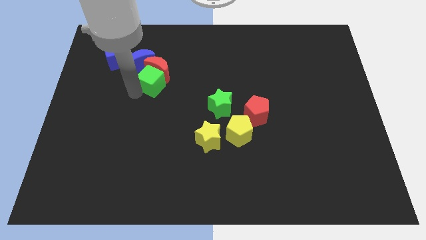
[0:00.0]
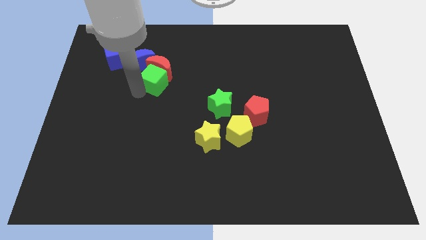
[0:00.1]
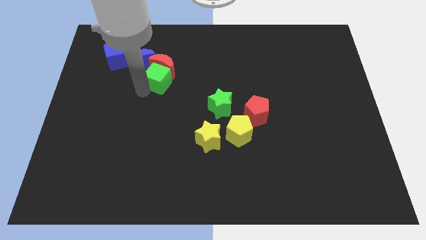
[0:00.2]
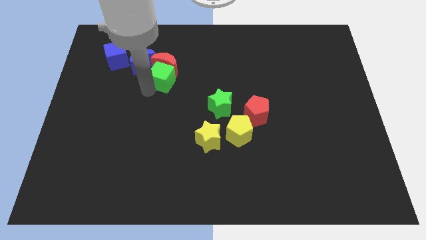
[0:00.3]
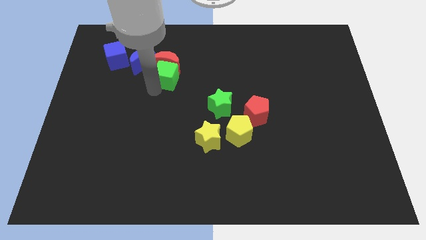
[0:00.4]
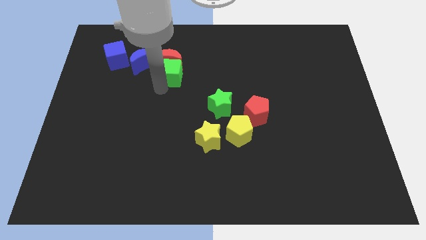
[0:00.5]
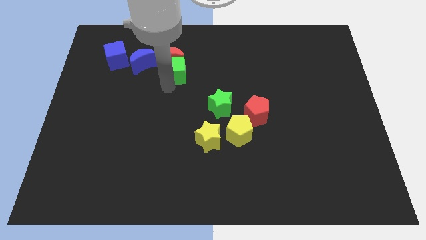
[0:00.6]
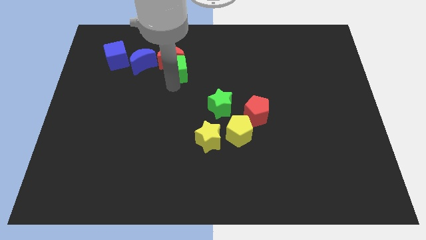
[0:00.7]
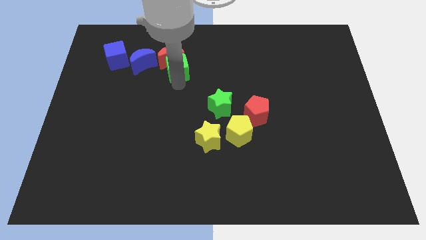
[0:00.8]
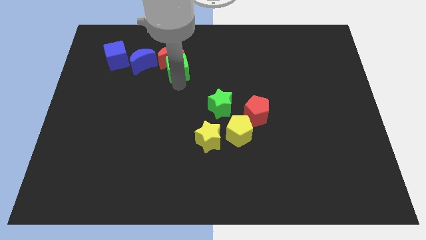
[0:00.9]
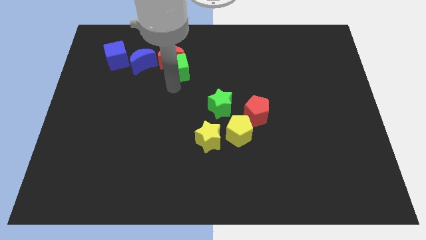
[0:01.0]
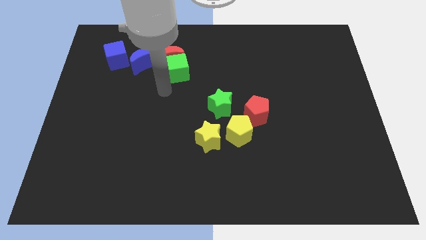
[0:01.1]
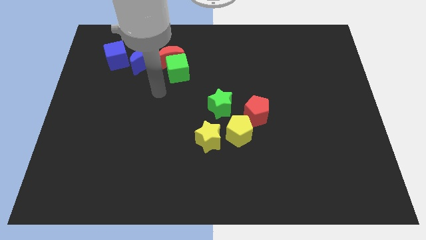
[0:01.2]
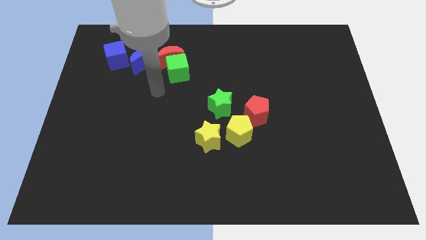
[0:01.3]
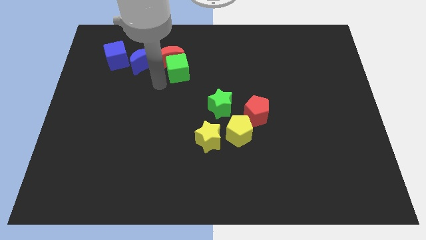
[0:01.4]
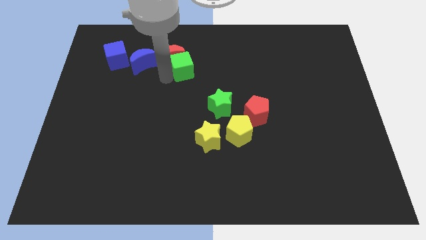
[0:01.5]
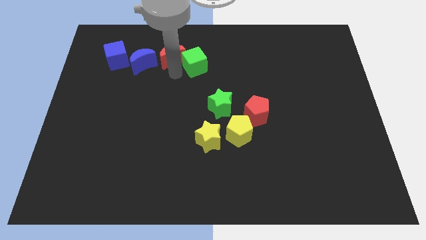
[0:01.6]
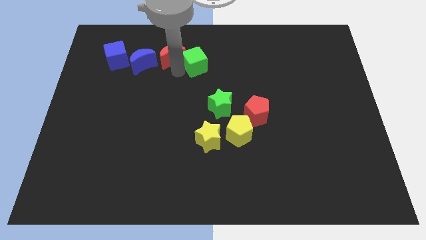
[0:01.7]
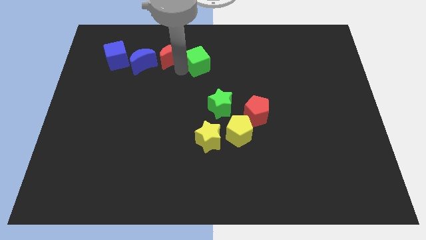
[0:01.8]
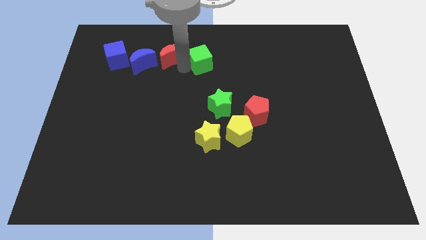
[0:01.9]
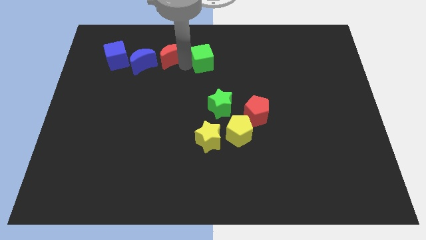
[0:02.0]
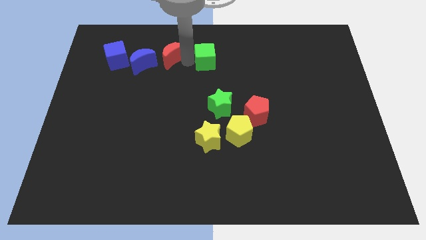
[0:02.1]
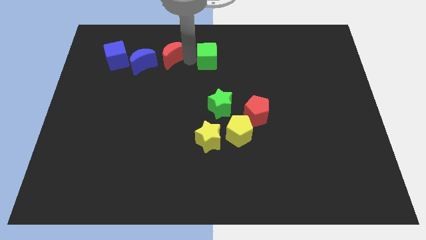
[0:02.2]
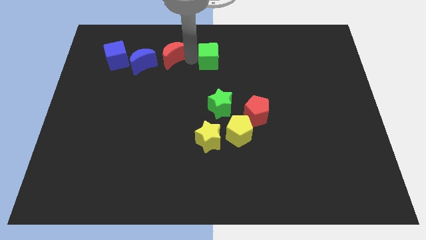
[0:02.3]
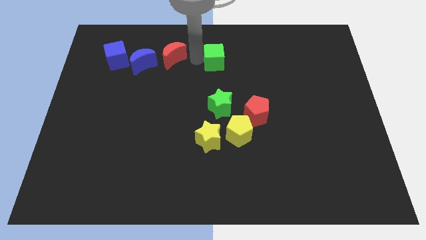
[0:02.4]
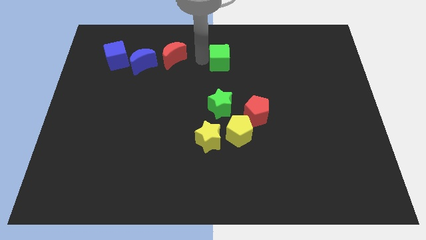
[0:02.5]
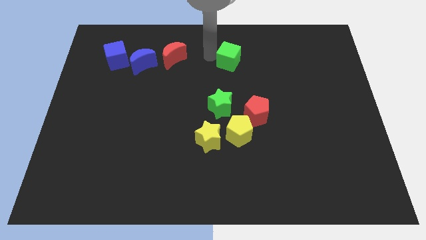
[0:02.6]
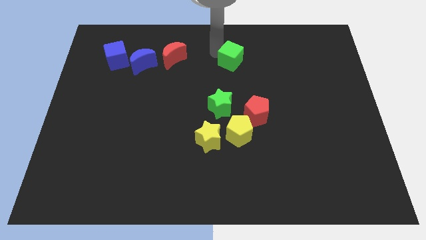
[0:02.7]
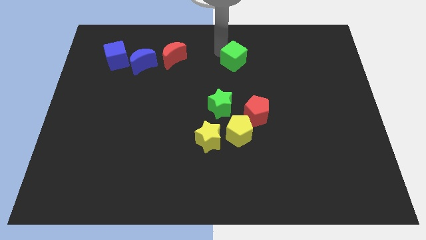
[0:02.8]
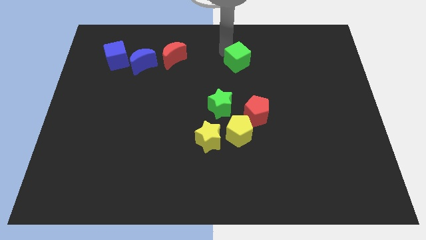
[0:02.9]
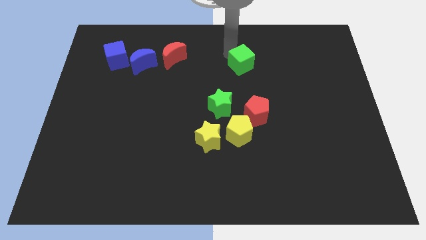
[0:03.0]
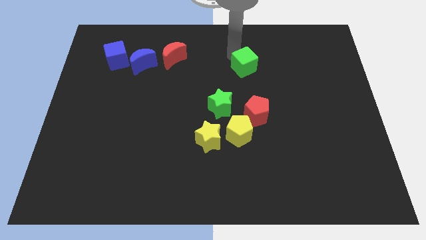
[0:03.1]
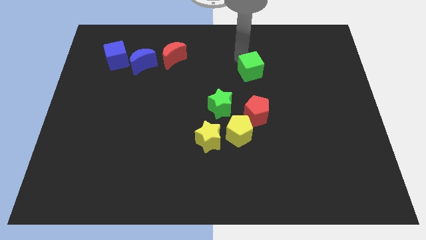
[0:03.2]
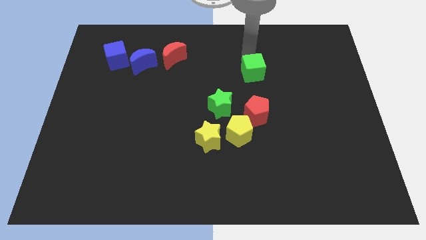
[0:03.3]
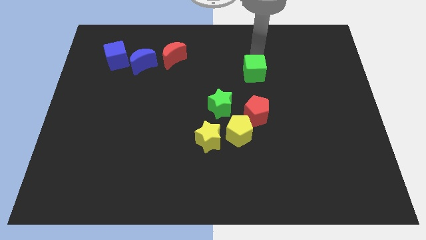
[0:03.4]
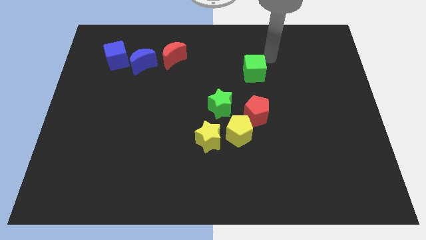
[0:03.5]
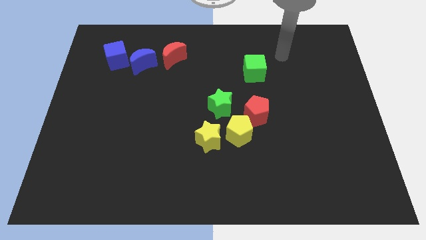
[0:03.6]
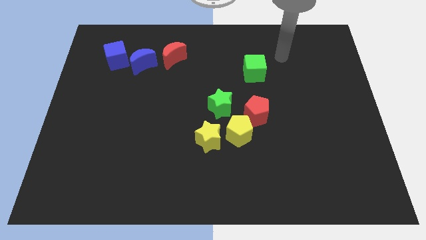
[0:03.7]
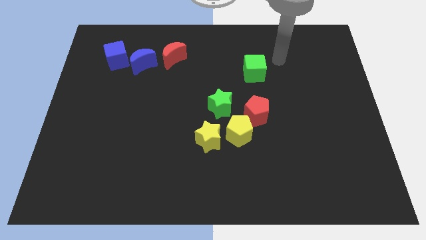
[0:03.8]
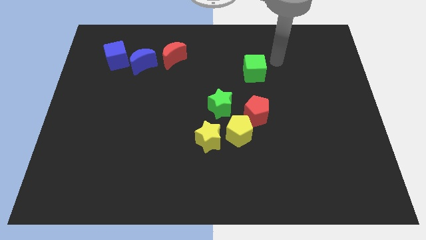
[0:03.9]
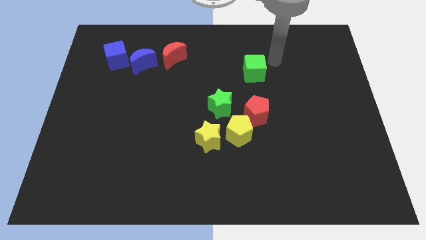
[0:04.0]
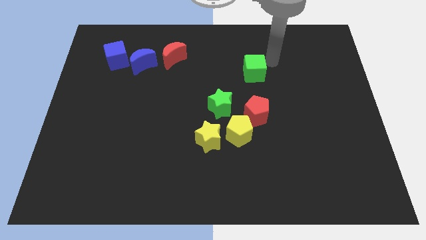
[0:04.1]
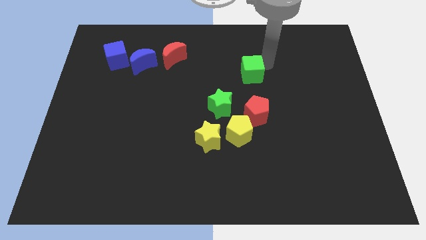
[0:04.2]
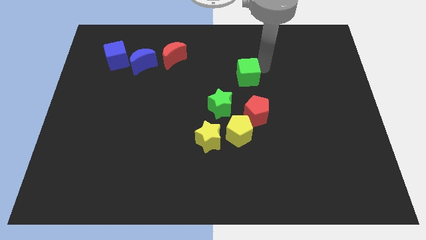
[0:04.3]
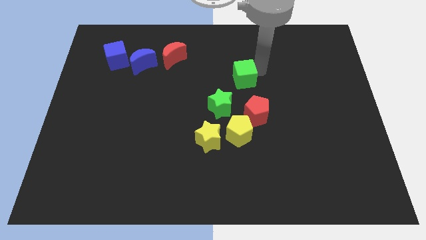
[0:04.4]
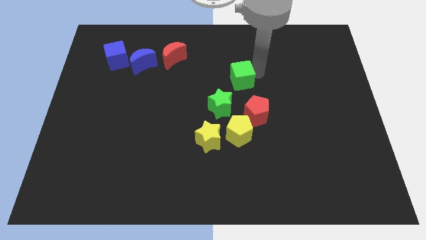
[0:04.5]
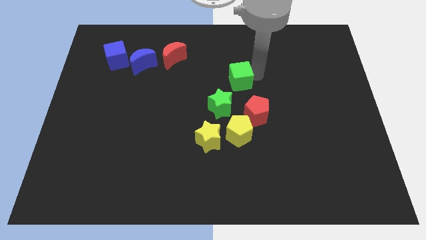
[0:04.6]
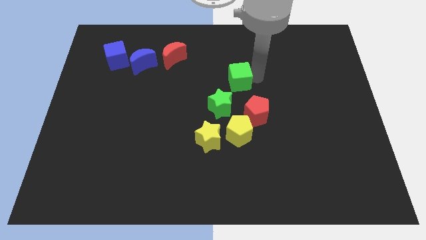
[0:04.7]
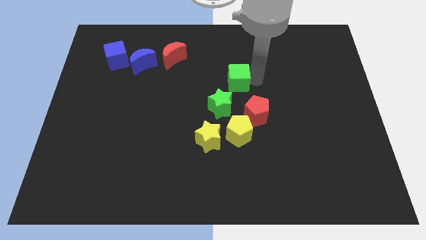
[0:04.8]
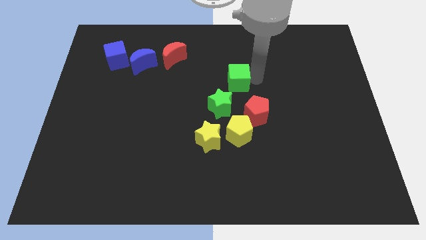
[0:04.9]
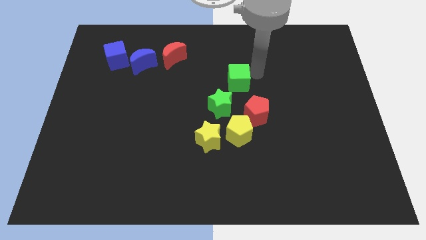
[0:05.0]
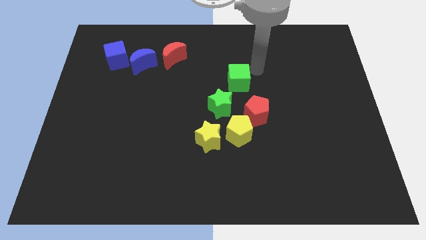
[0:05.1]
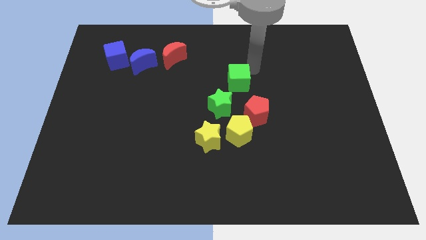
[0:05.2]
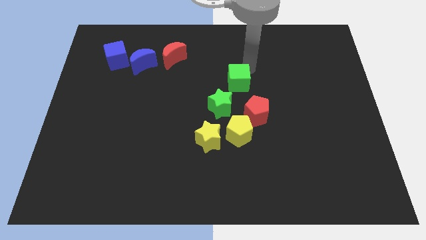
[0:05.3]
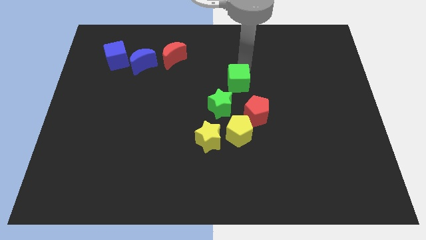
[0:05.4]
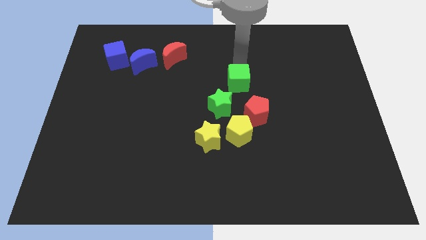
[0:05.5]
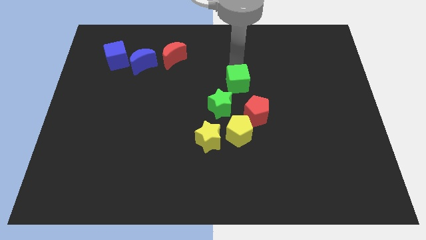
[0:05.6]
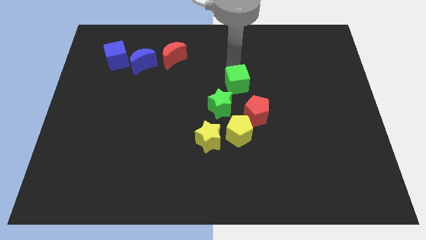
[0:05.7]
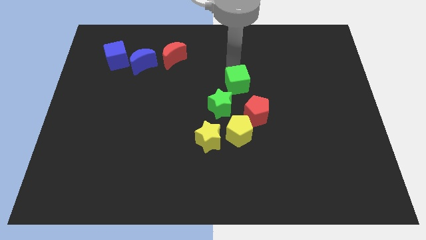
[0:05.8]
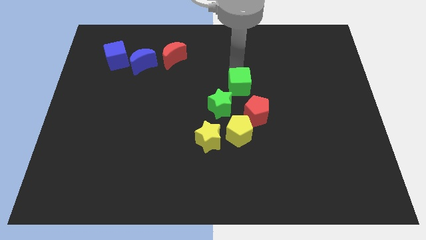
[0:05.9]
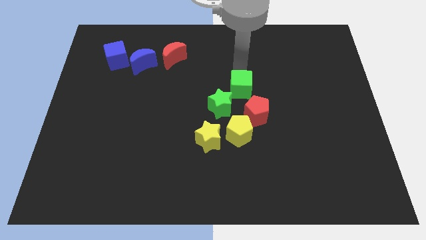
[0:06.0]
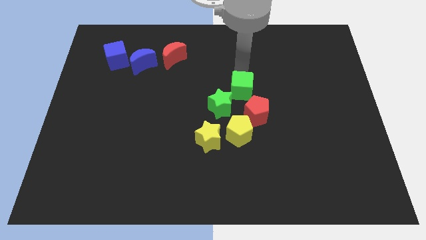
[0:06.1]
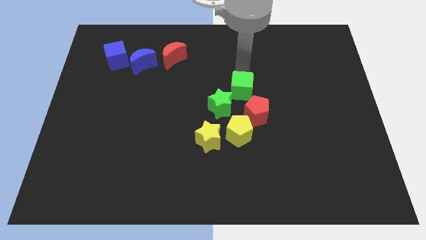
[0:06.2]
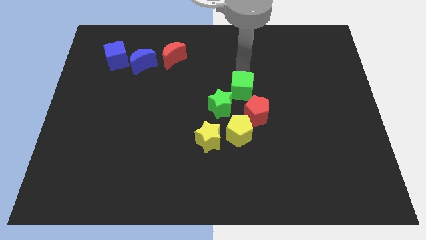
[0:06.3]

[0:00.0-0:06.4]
place the green cube diagonally to the red pentagon

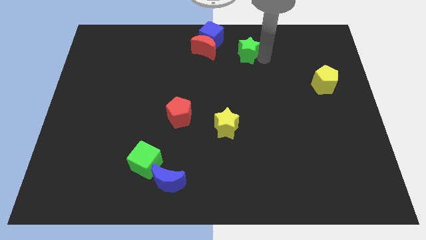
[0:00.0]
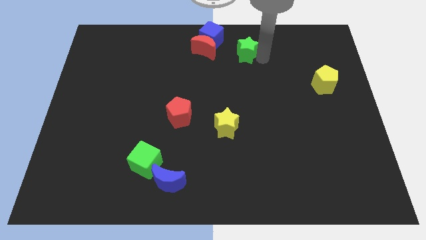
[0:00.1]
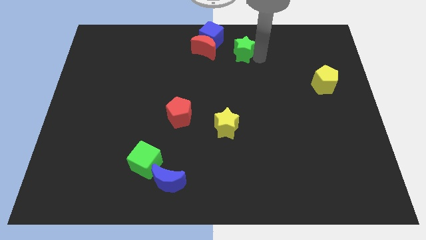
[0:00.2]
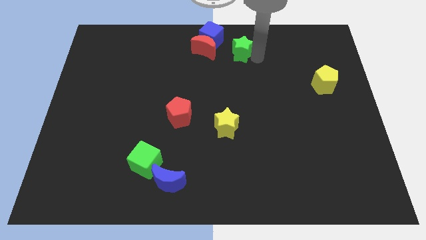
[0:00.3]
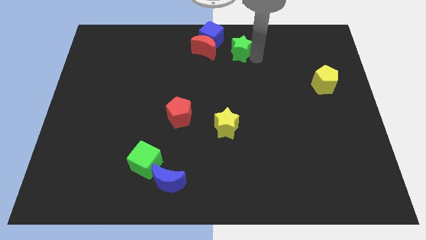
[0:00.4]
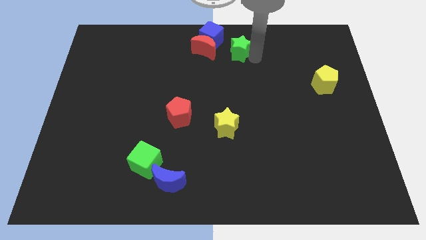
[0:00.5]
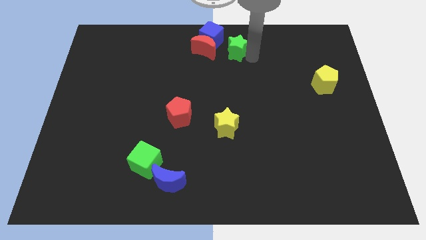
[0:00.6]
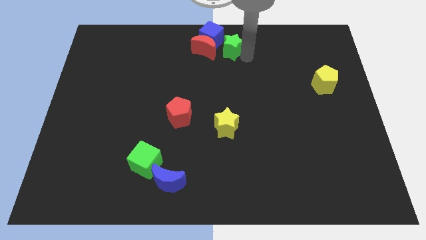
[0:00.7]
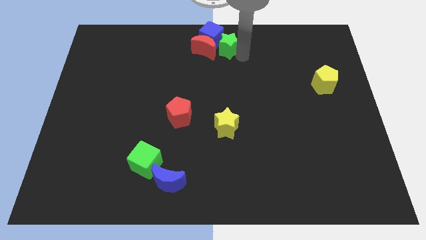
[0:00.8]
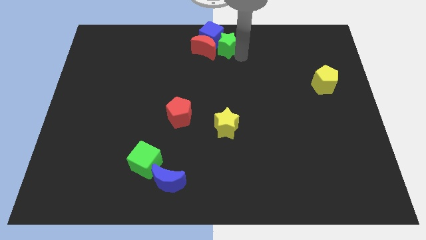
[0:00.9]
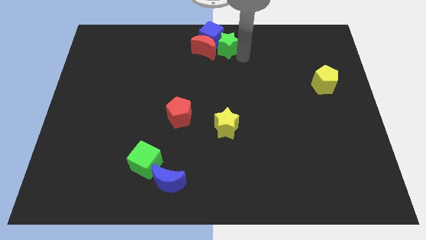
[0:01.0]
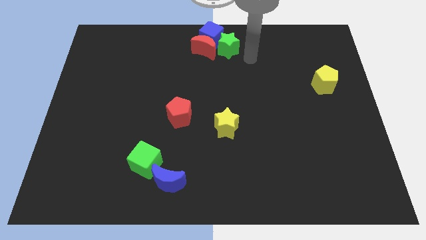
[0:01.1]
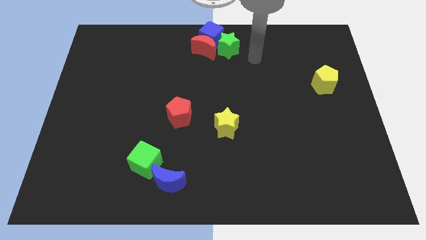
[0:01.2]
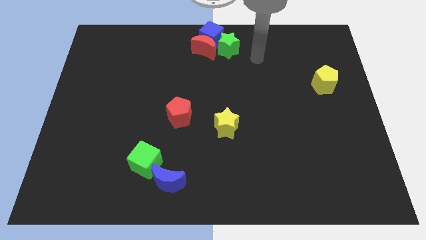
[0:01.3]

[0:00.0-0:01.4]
push the green star close to the blue cube

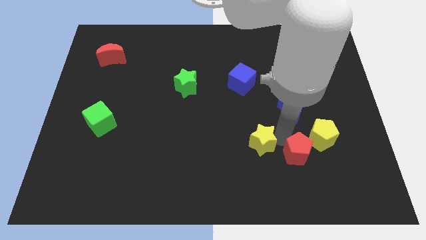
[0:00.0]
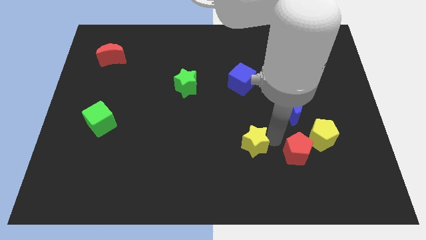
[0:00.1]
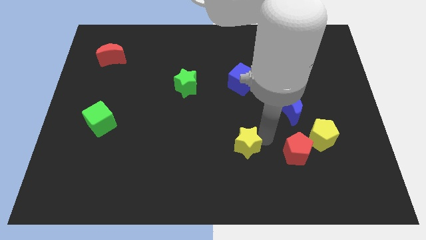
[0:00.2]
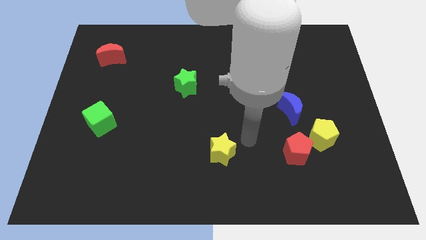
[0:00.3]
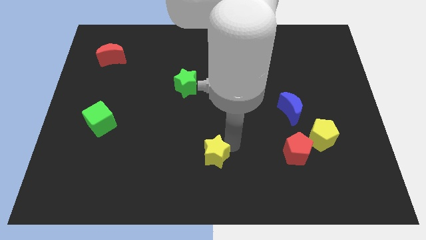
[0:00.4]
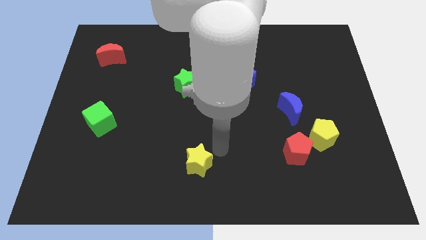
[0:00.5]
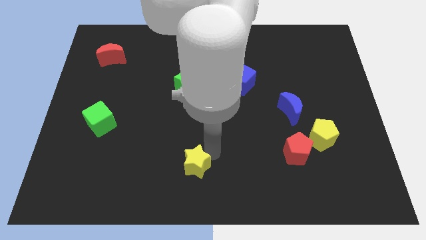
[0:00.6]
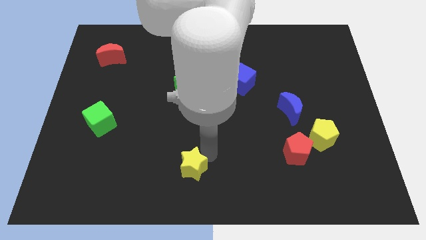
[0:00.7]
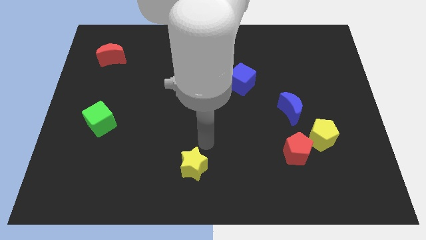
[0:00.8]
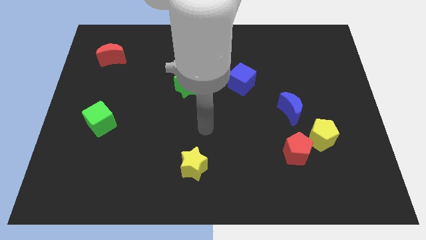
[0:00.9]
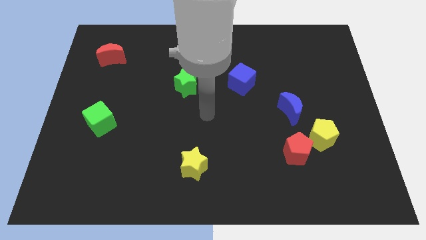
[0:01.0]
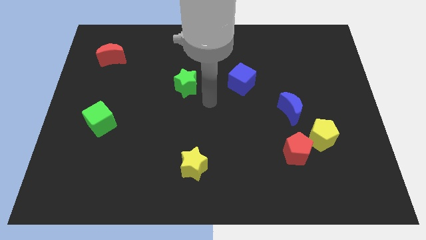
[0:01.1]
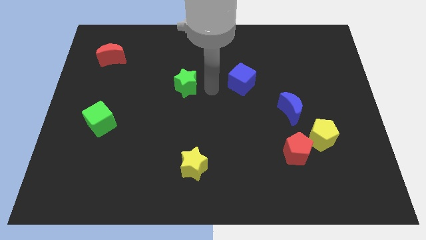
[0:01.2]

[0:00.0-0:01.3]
move the yellow star towards the bottom of the board diagonally
